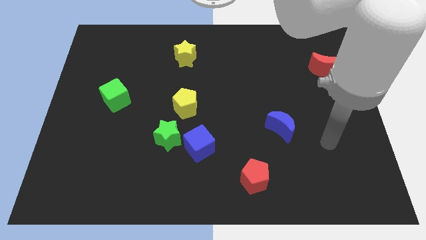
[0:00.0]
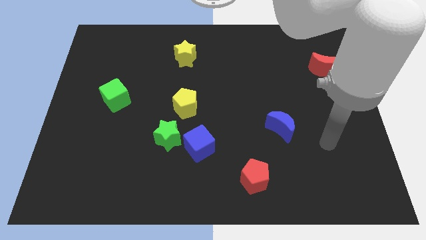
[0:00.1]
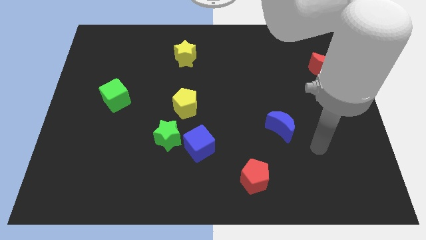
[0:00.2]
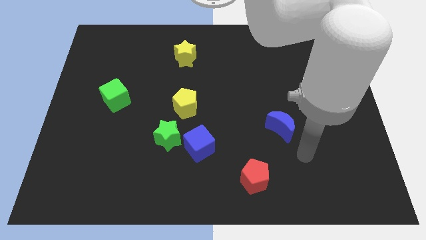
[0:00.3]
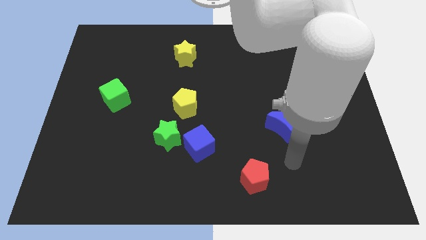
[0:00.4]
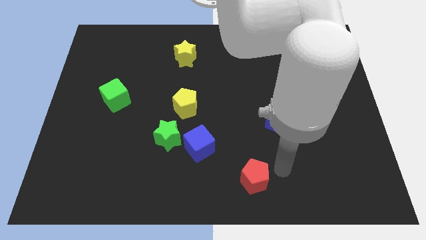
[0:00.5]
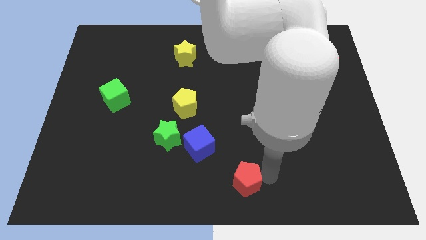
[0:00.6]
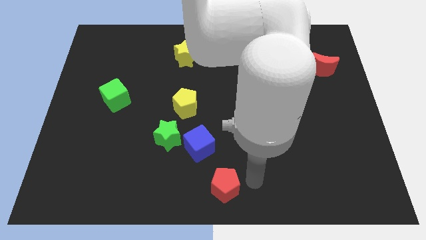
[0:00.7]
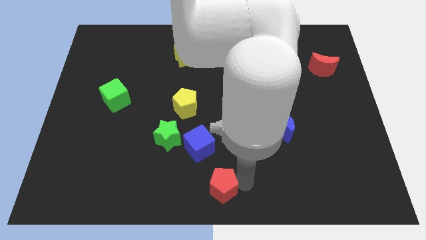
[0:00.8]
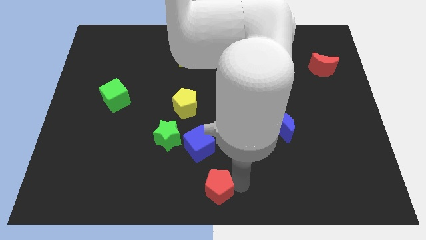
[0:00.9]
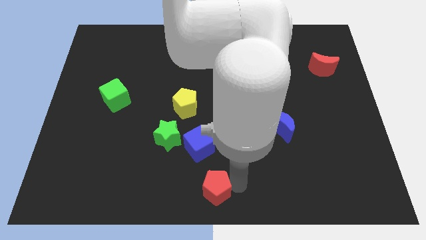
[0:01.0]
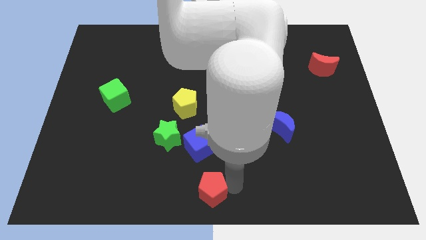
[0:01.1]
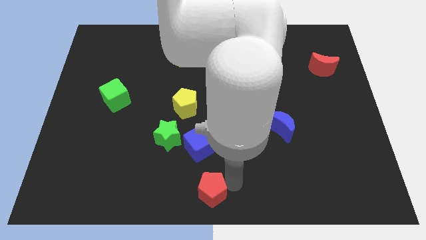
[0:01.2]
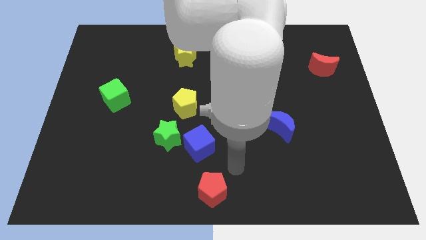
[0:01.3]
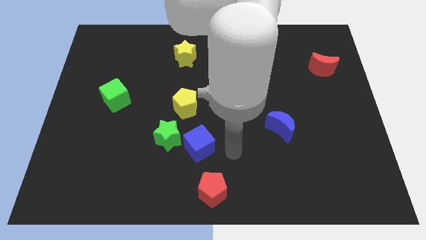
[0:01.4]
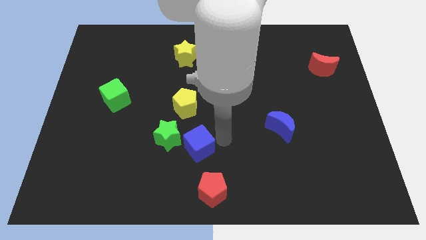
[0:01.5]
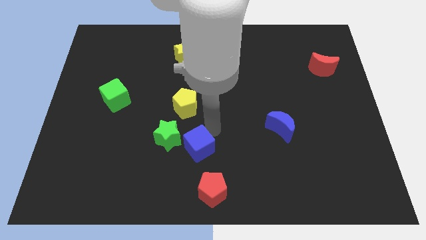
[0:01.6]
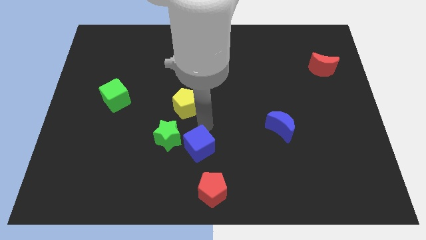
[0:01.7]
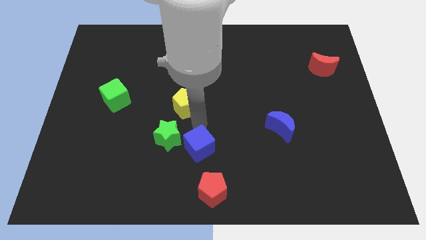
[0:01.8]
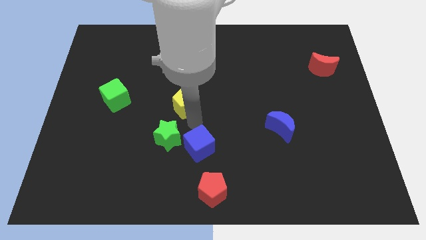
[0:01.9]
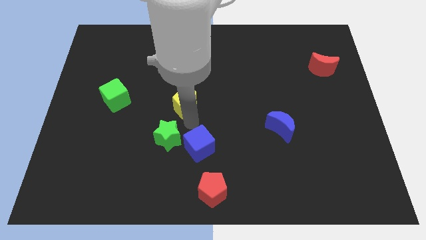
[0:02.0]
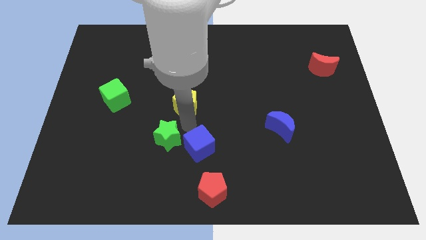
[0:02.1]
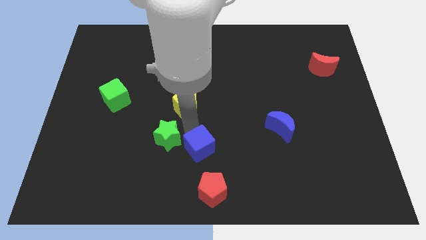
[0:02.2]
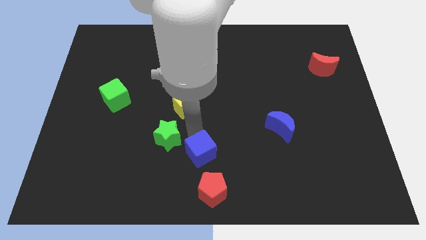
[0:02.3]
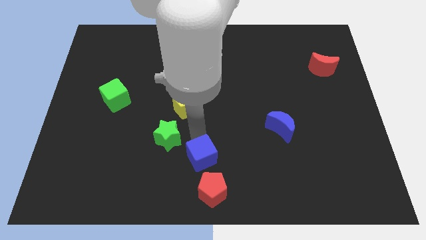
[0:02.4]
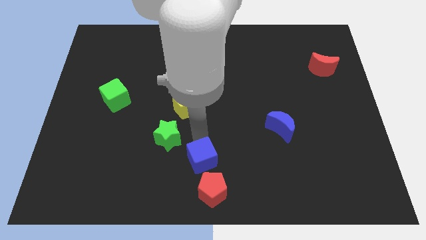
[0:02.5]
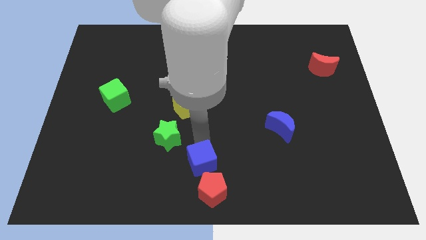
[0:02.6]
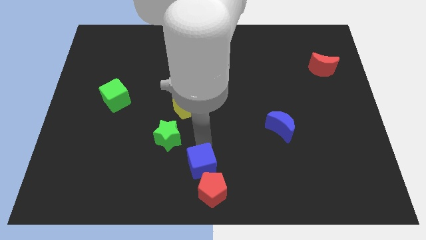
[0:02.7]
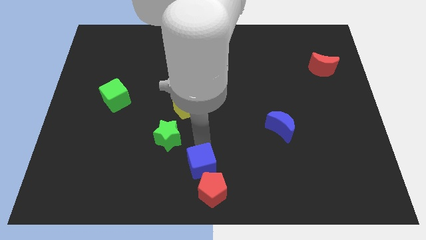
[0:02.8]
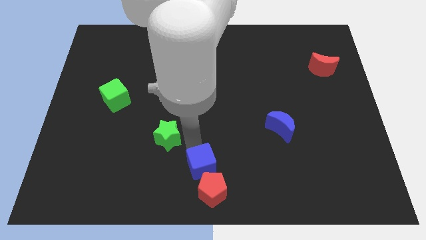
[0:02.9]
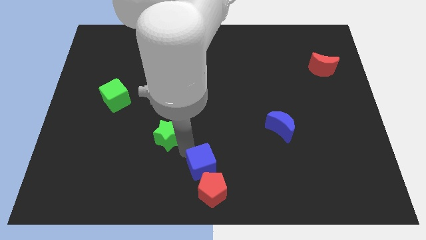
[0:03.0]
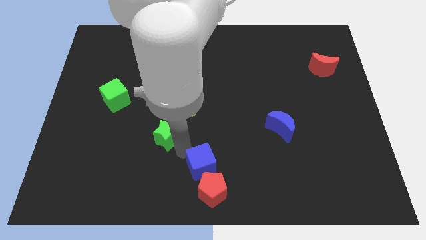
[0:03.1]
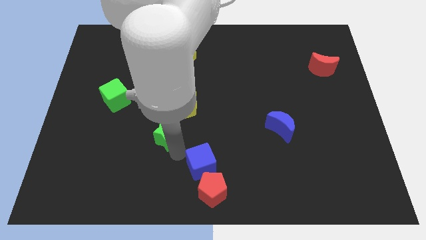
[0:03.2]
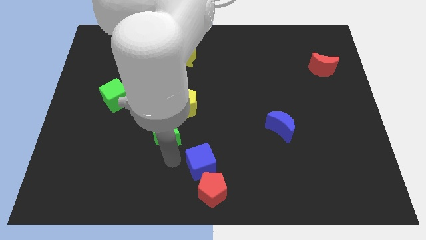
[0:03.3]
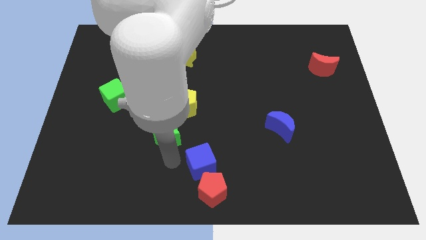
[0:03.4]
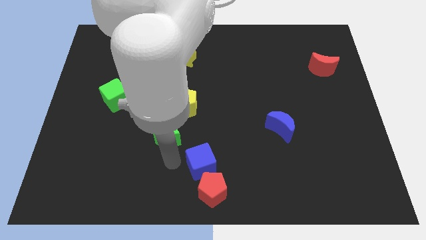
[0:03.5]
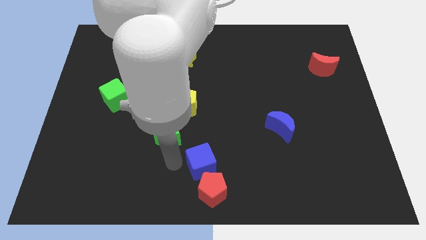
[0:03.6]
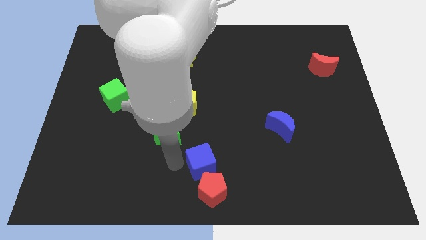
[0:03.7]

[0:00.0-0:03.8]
place the blue cube and red pentagon to the bottom center of the board

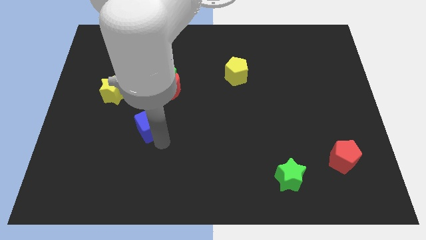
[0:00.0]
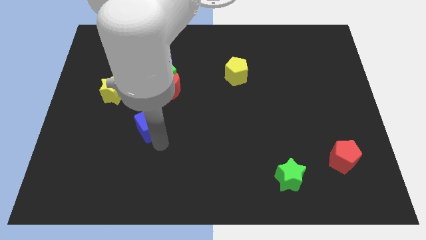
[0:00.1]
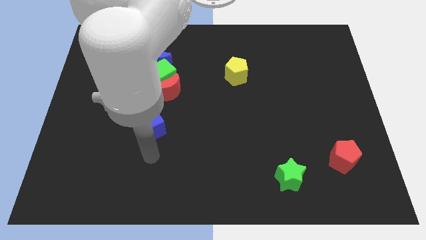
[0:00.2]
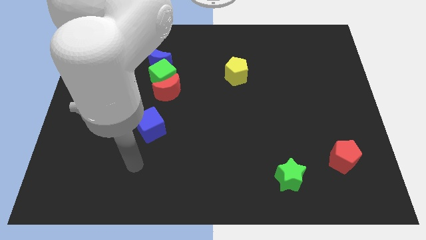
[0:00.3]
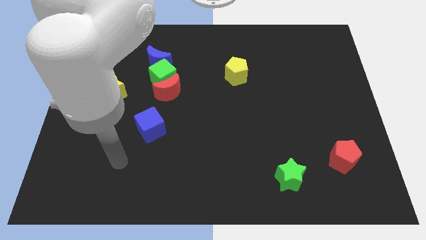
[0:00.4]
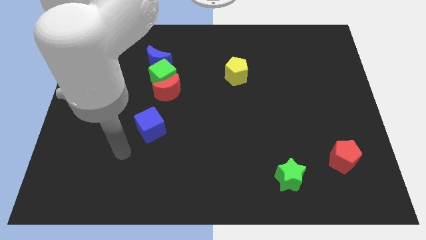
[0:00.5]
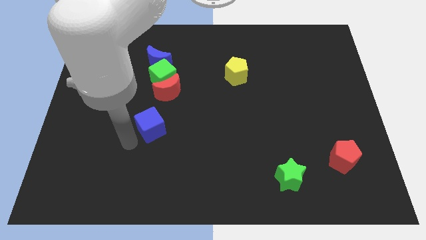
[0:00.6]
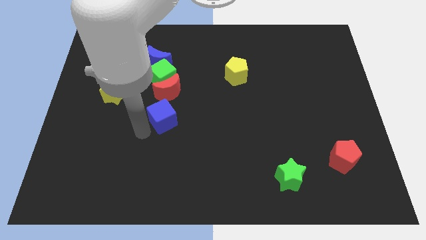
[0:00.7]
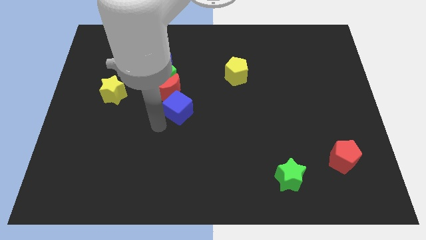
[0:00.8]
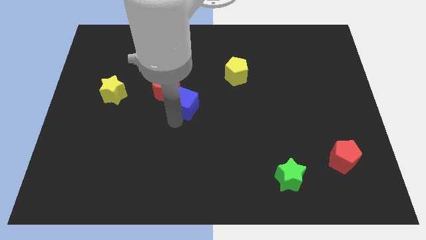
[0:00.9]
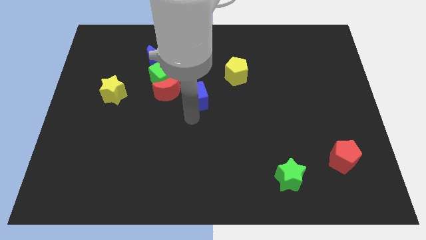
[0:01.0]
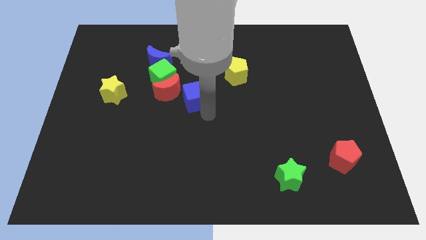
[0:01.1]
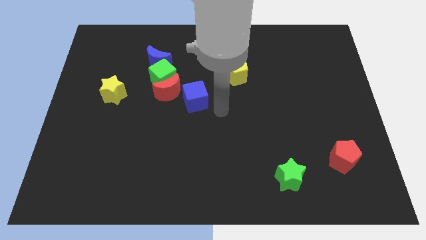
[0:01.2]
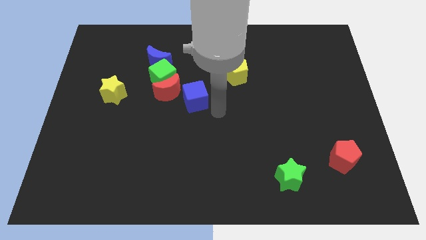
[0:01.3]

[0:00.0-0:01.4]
push the blue cube to the bottom right of the red crescent

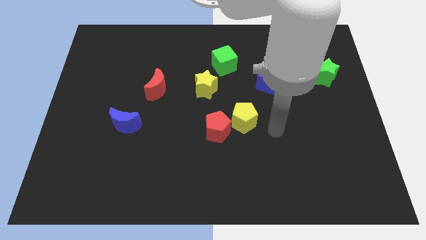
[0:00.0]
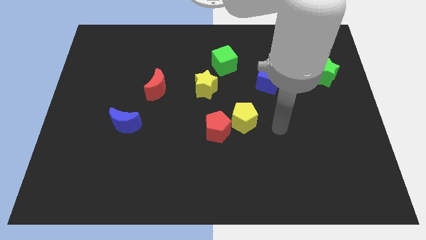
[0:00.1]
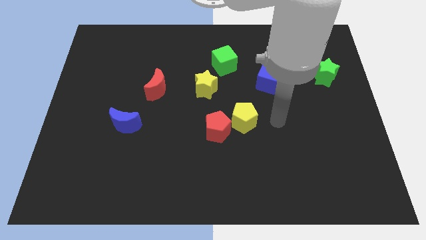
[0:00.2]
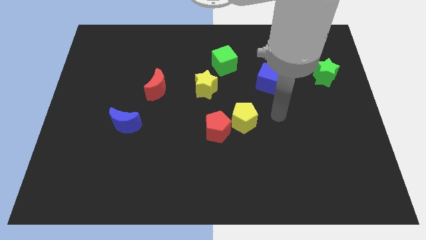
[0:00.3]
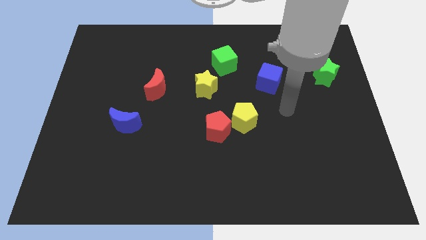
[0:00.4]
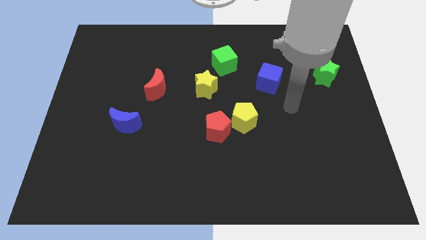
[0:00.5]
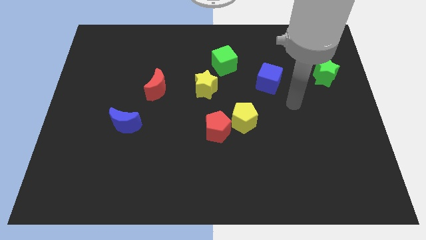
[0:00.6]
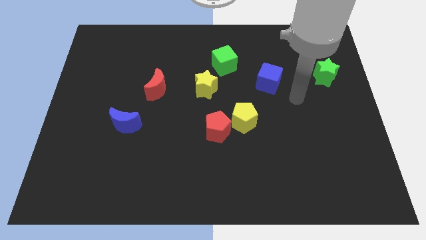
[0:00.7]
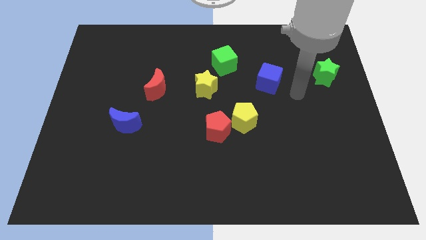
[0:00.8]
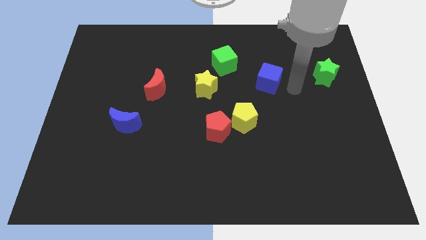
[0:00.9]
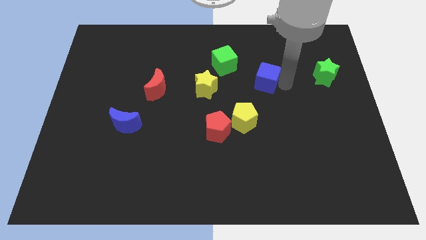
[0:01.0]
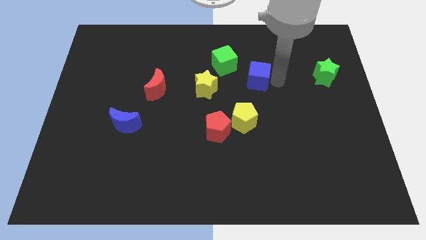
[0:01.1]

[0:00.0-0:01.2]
push the blue cube slightly to the left

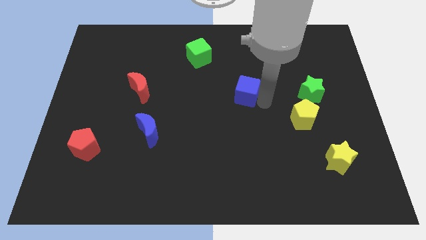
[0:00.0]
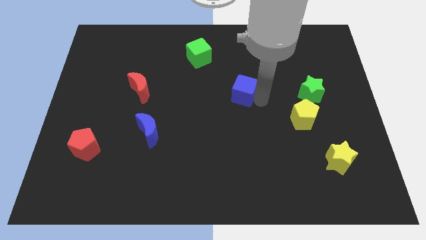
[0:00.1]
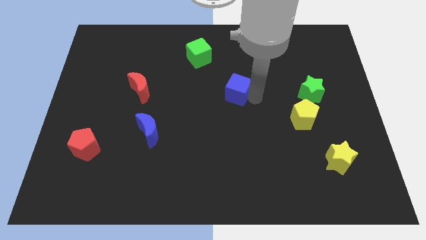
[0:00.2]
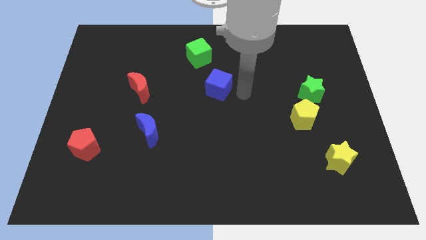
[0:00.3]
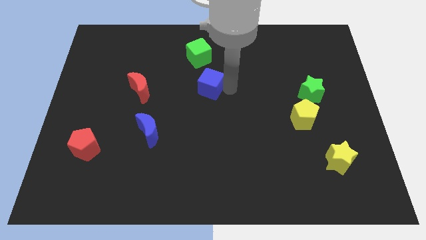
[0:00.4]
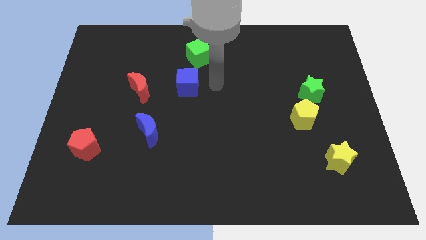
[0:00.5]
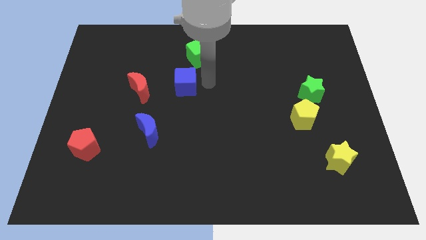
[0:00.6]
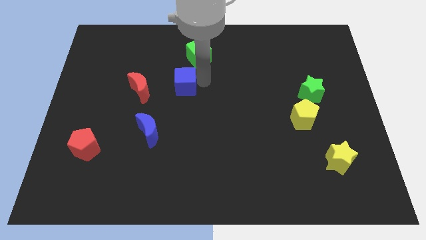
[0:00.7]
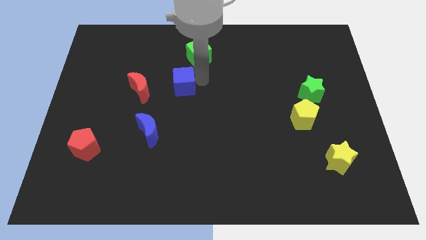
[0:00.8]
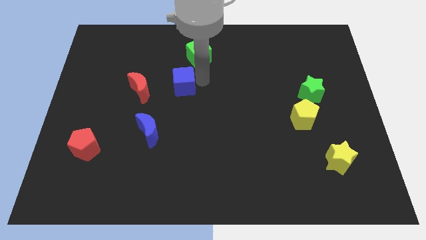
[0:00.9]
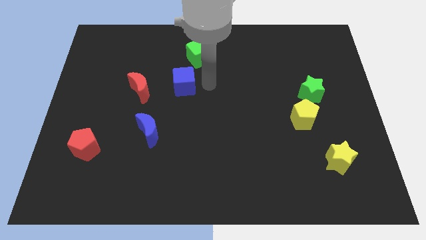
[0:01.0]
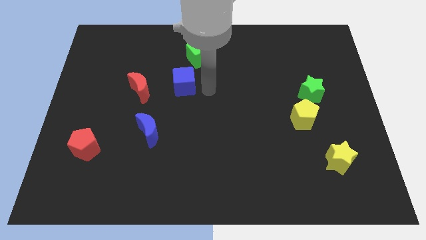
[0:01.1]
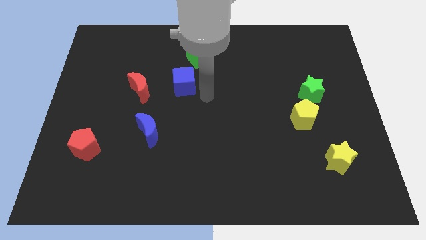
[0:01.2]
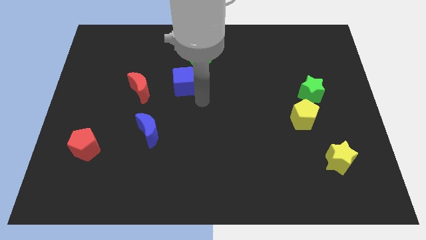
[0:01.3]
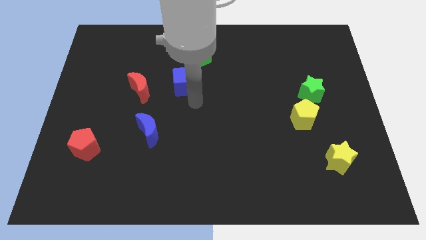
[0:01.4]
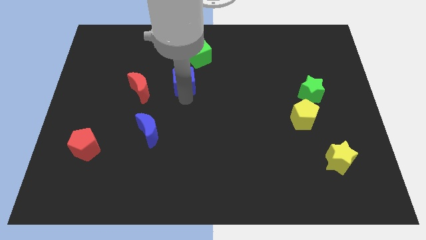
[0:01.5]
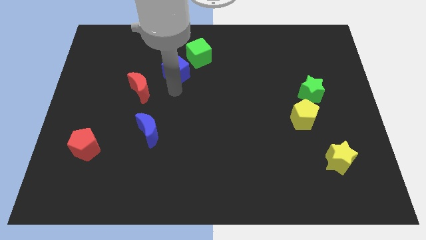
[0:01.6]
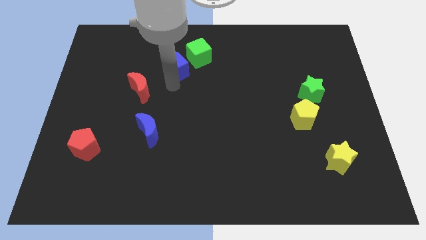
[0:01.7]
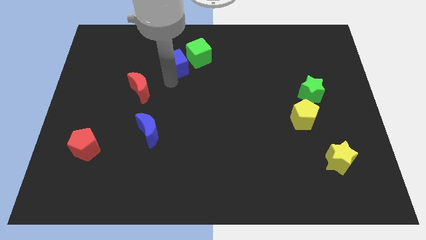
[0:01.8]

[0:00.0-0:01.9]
slide the blue cube to the left of the green cube

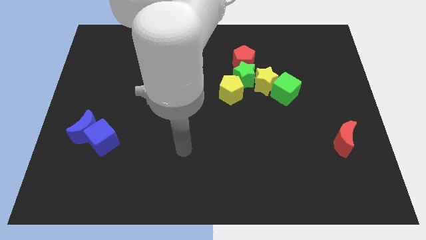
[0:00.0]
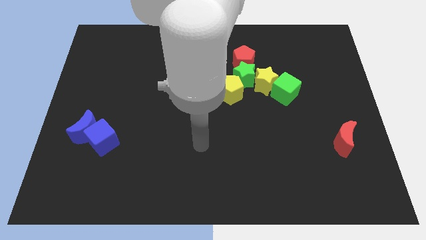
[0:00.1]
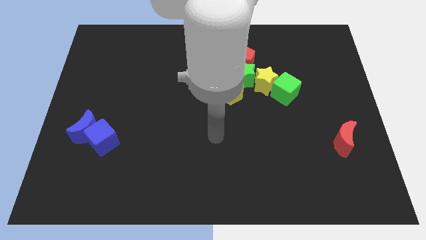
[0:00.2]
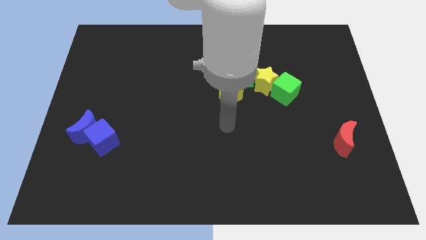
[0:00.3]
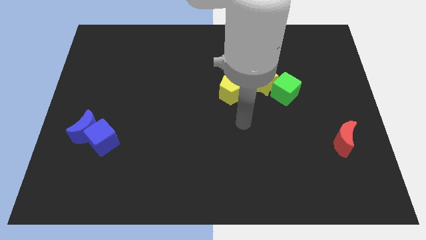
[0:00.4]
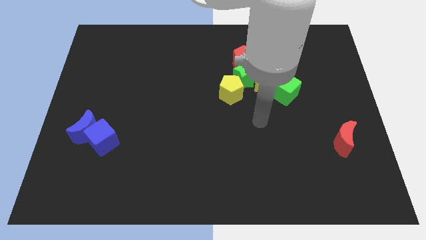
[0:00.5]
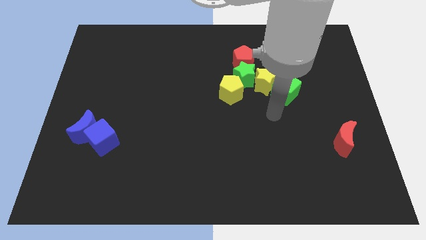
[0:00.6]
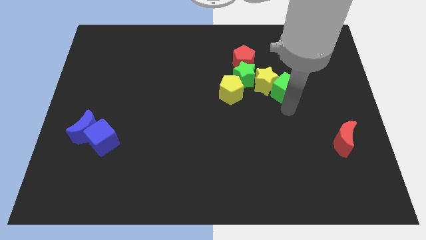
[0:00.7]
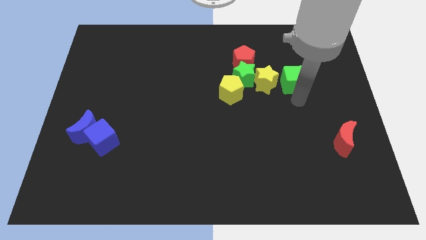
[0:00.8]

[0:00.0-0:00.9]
touch the bottom of the green cube
